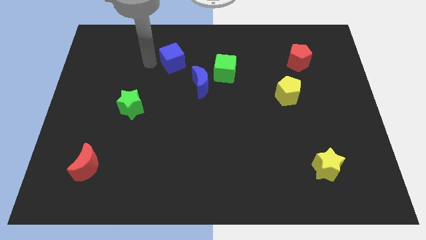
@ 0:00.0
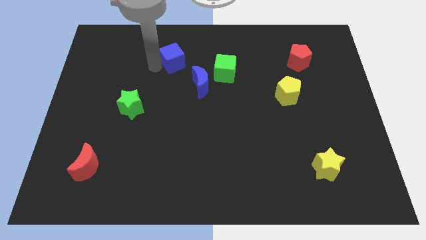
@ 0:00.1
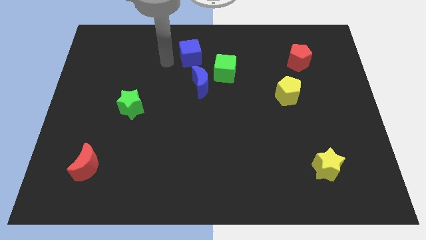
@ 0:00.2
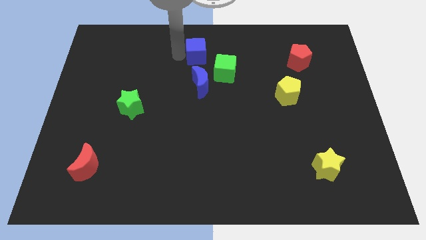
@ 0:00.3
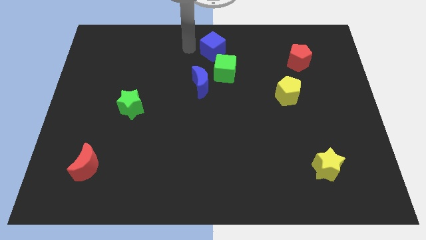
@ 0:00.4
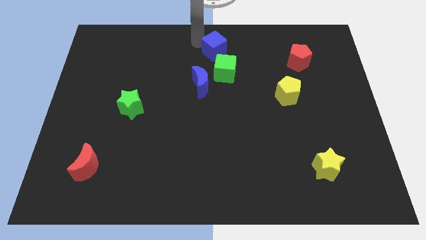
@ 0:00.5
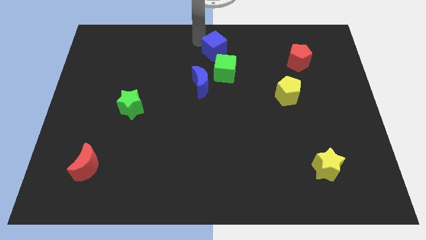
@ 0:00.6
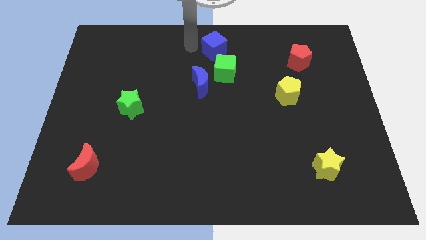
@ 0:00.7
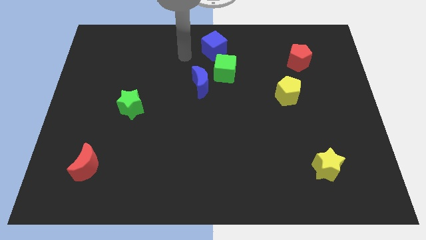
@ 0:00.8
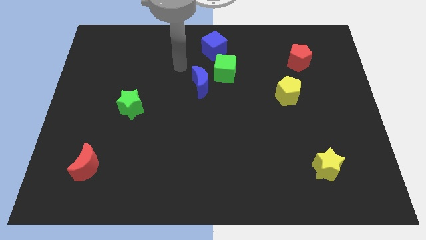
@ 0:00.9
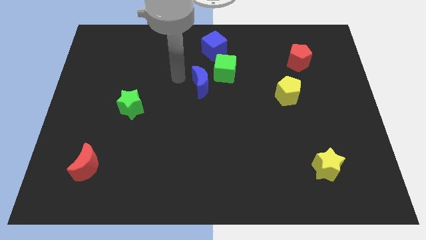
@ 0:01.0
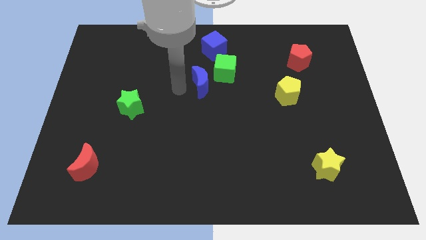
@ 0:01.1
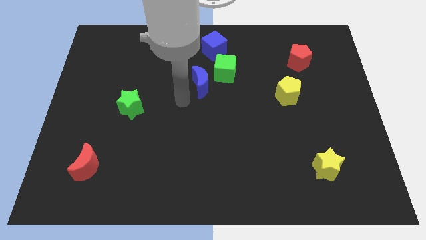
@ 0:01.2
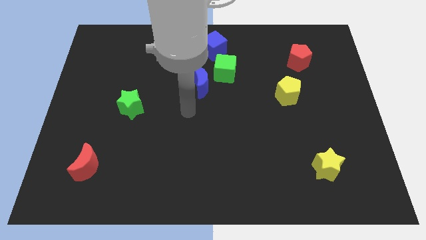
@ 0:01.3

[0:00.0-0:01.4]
move the blue cube to the right

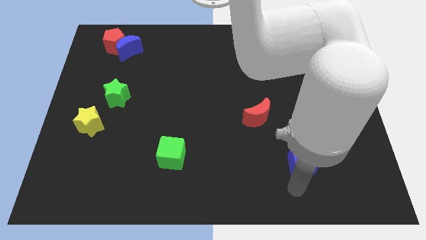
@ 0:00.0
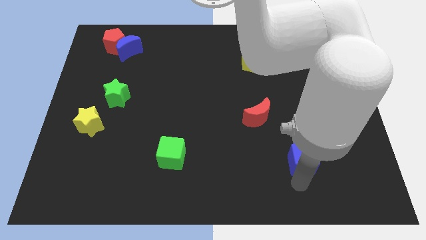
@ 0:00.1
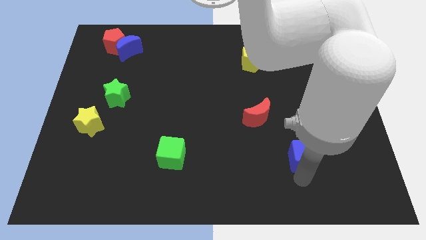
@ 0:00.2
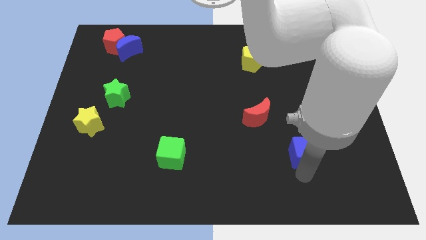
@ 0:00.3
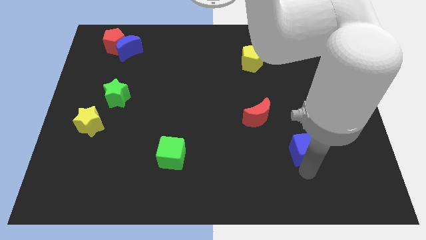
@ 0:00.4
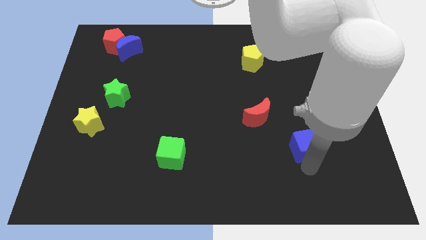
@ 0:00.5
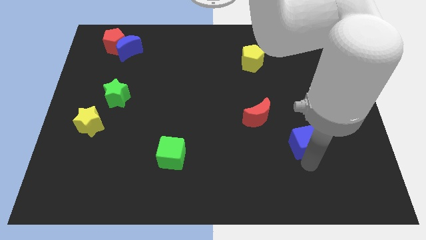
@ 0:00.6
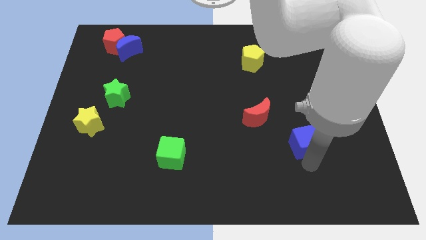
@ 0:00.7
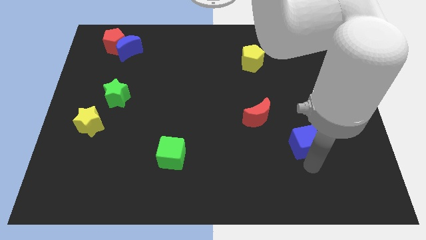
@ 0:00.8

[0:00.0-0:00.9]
slightly push the blue cube upward

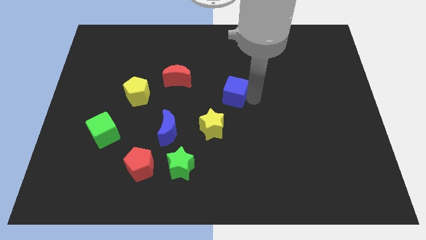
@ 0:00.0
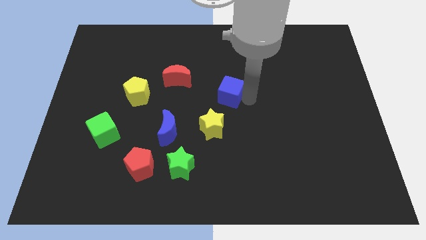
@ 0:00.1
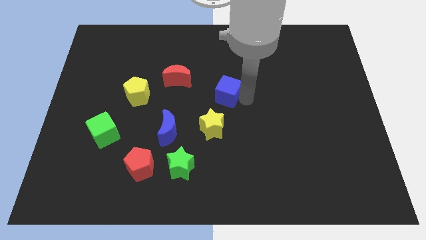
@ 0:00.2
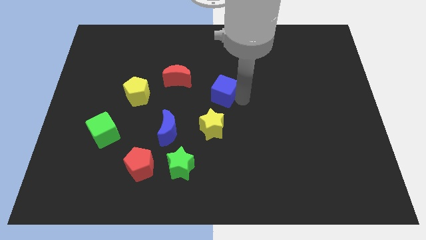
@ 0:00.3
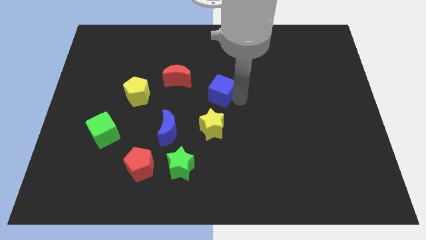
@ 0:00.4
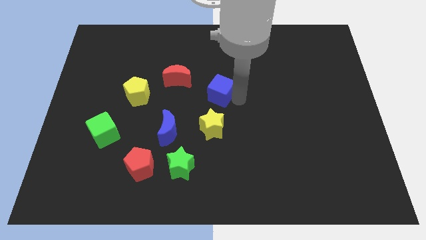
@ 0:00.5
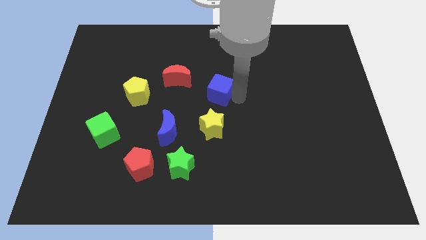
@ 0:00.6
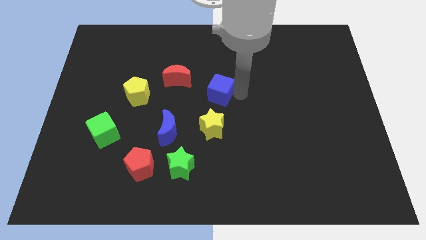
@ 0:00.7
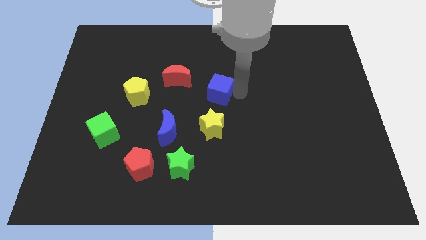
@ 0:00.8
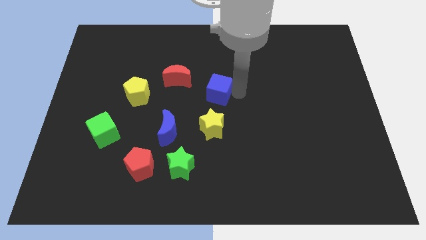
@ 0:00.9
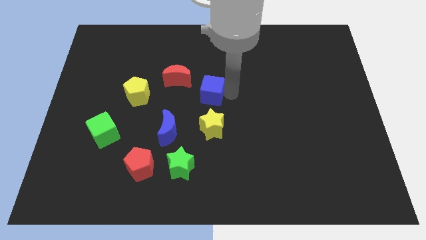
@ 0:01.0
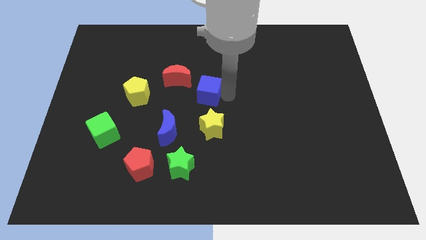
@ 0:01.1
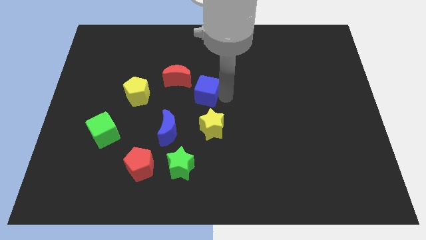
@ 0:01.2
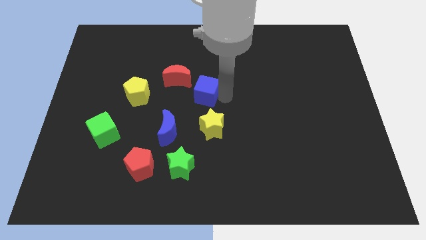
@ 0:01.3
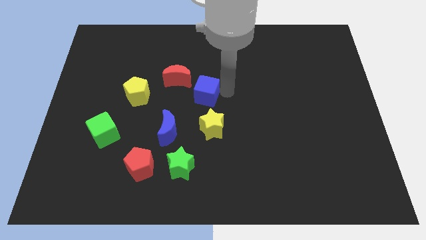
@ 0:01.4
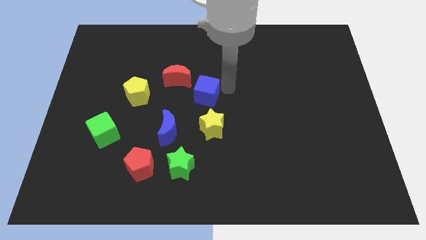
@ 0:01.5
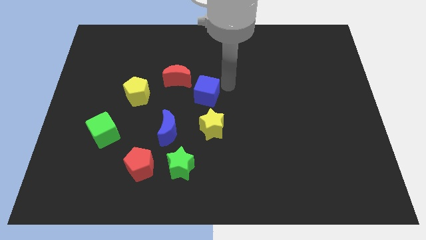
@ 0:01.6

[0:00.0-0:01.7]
place the blue cube above the yellow star

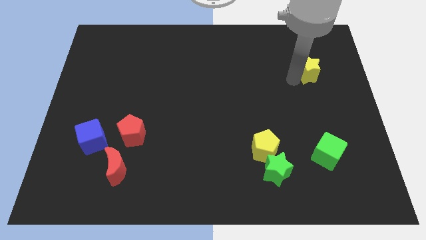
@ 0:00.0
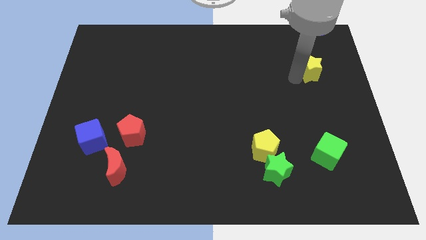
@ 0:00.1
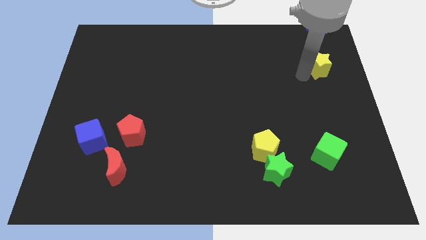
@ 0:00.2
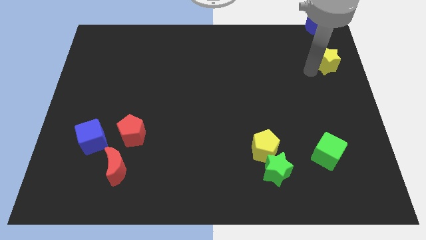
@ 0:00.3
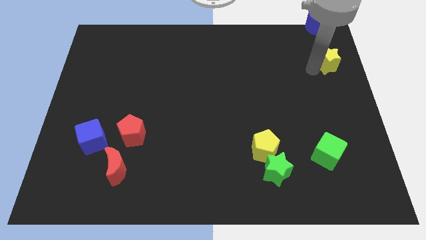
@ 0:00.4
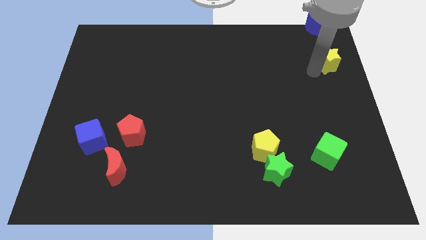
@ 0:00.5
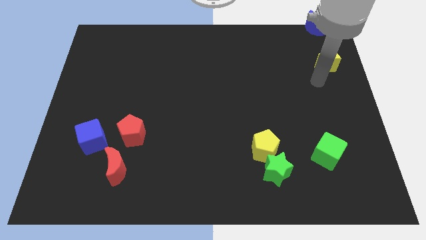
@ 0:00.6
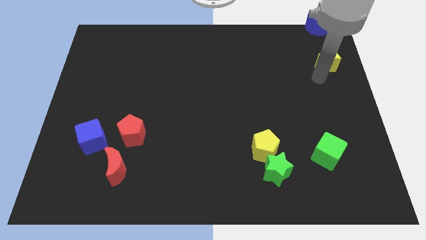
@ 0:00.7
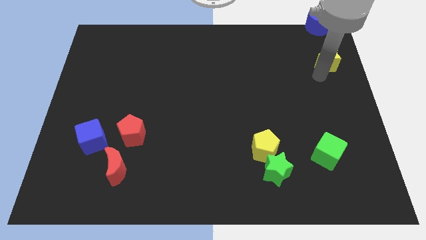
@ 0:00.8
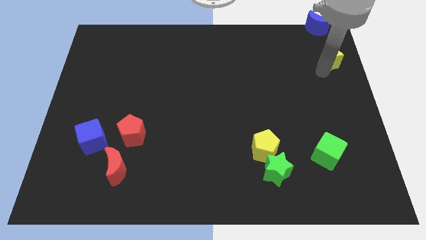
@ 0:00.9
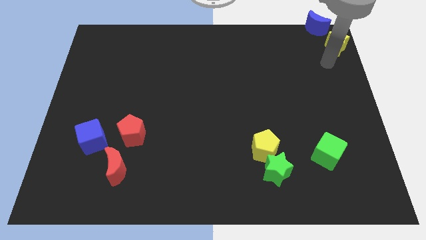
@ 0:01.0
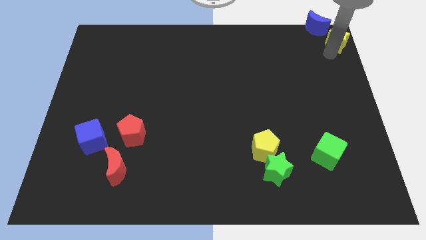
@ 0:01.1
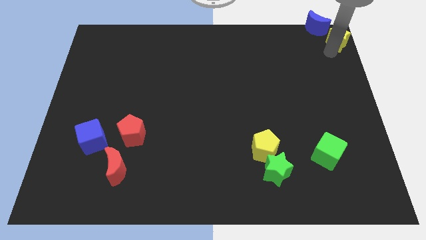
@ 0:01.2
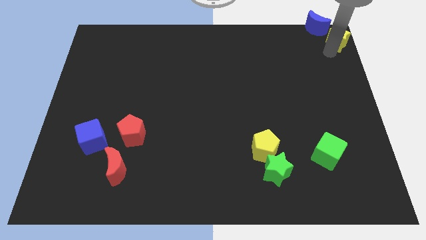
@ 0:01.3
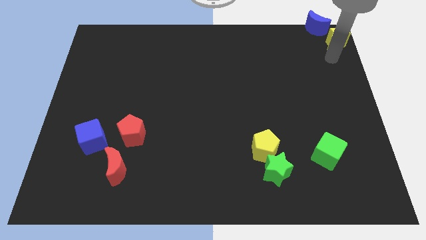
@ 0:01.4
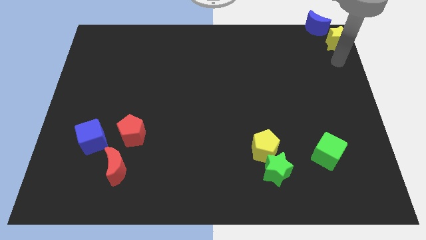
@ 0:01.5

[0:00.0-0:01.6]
push the yellow star towards the top right corner of the board

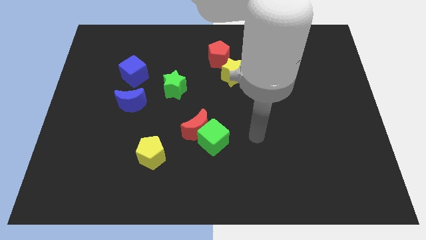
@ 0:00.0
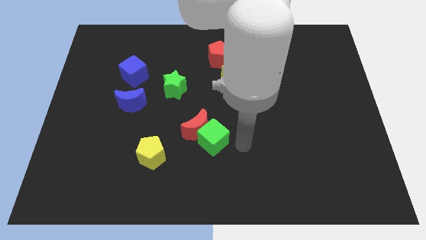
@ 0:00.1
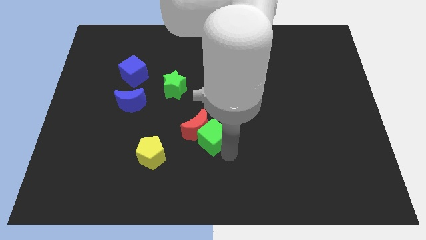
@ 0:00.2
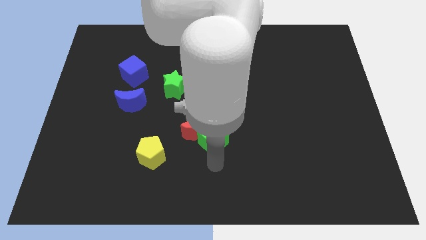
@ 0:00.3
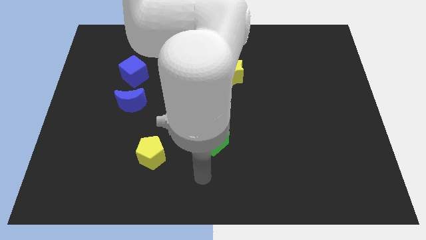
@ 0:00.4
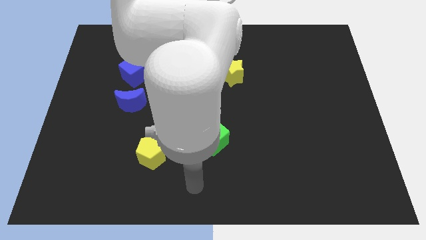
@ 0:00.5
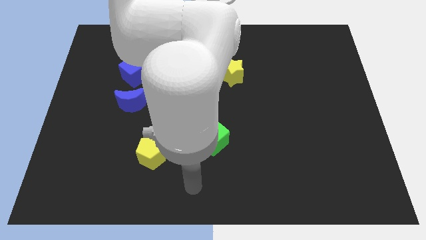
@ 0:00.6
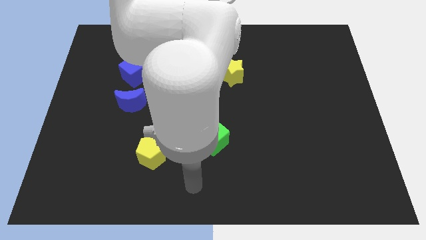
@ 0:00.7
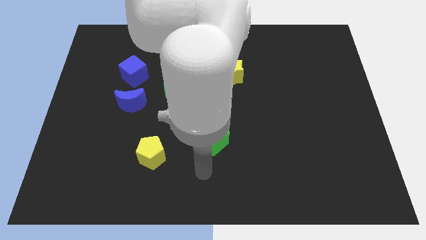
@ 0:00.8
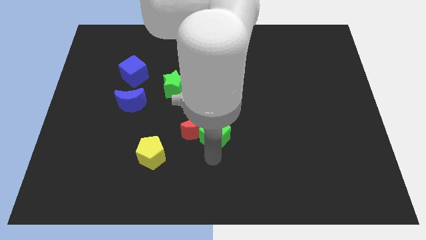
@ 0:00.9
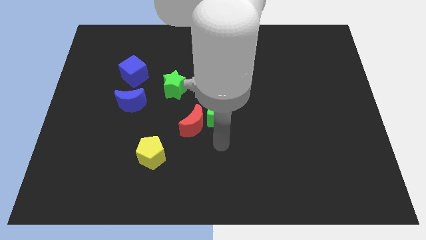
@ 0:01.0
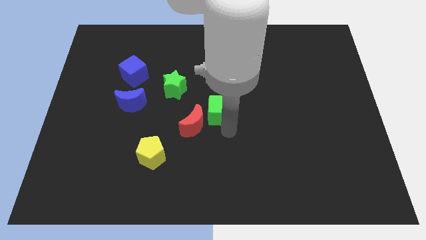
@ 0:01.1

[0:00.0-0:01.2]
push the green cube away from the red moon

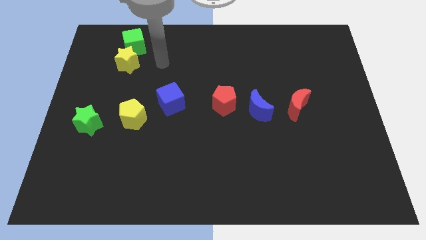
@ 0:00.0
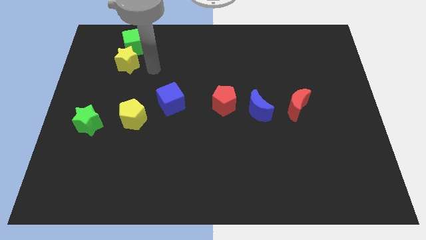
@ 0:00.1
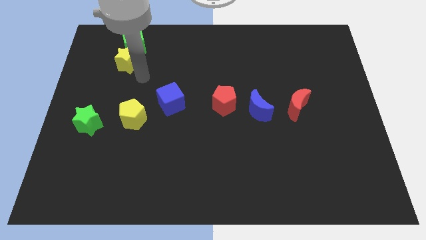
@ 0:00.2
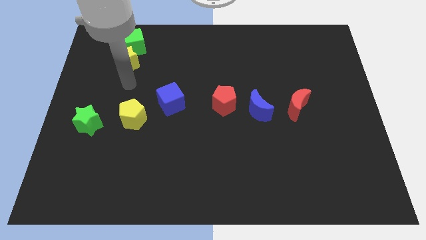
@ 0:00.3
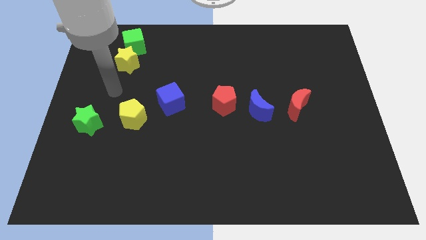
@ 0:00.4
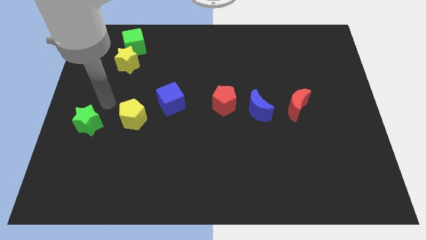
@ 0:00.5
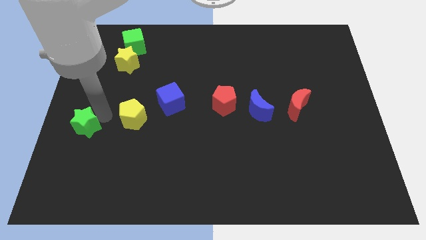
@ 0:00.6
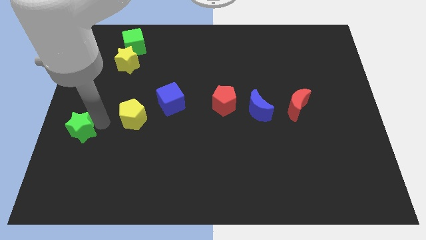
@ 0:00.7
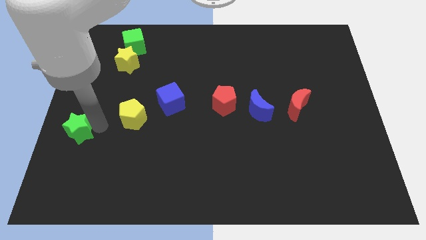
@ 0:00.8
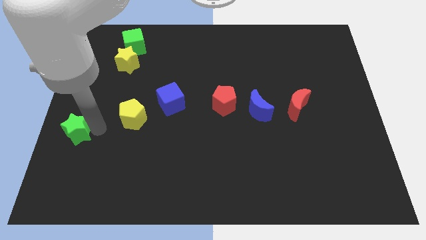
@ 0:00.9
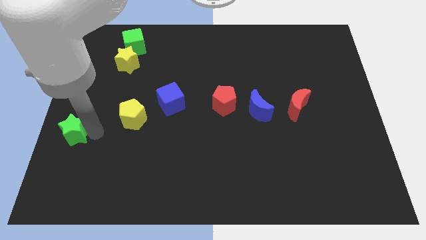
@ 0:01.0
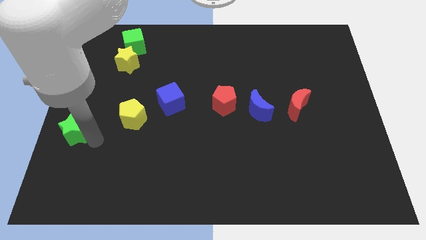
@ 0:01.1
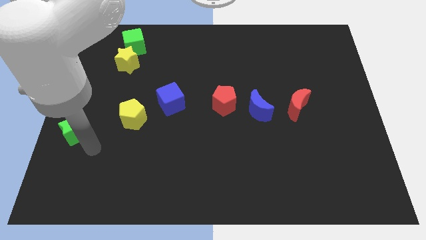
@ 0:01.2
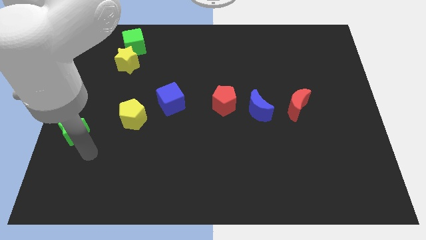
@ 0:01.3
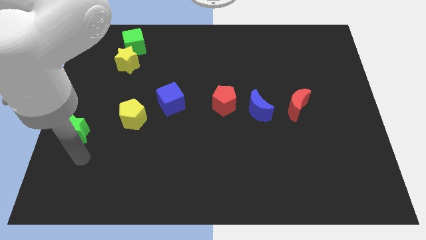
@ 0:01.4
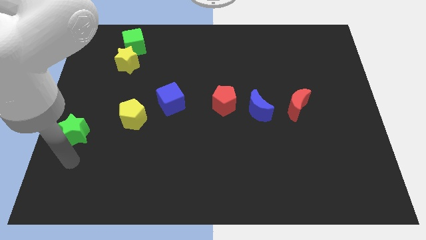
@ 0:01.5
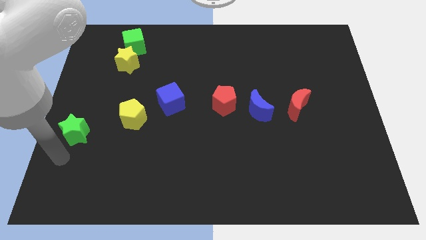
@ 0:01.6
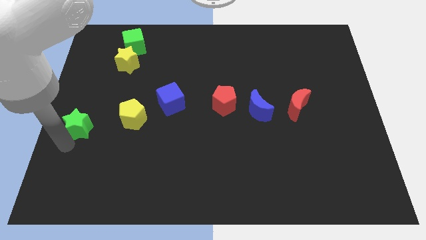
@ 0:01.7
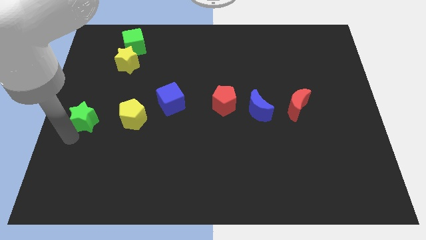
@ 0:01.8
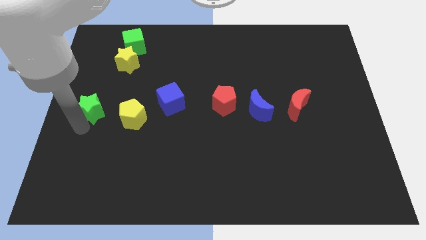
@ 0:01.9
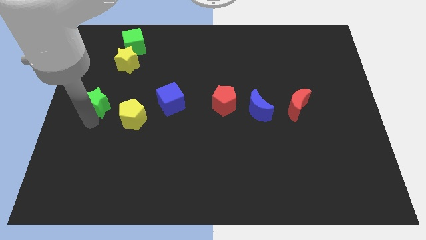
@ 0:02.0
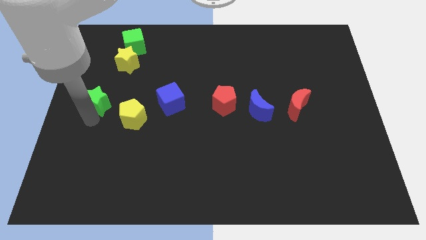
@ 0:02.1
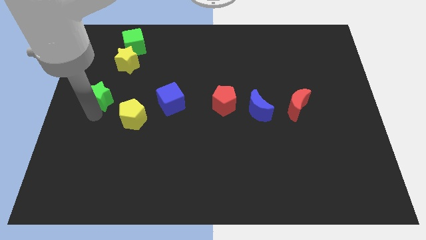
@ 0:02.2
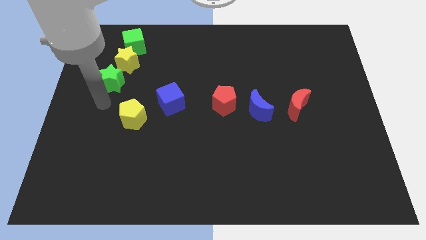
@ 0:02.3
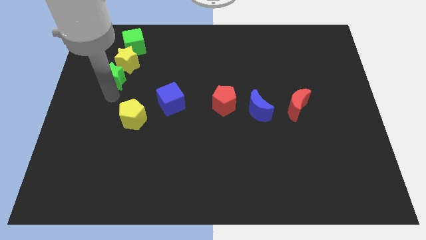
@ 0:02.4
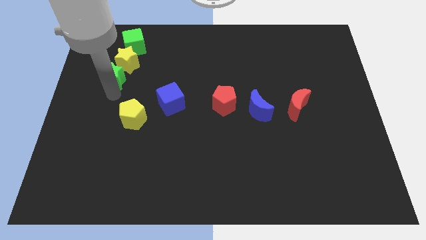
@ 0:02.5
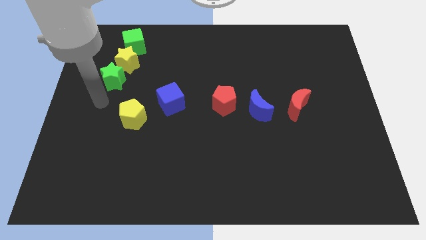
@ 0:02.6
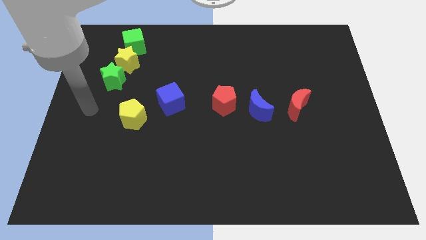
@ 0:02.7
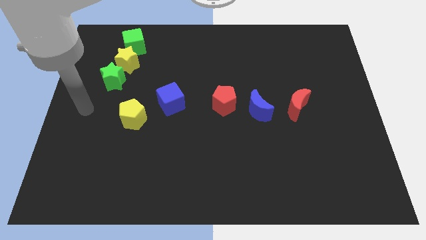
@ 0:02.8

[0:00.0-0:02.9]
push green star diagonally above yellow pentagon
